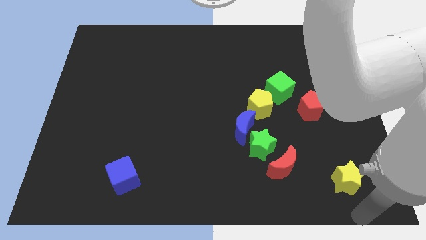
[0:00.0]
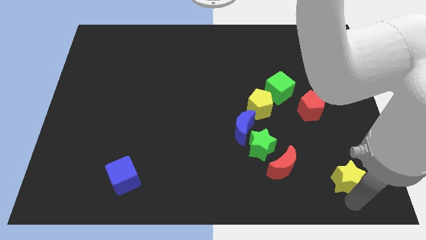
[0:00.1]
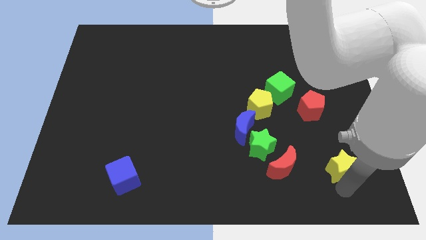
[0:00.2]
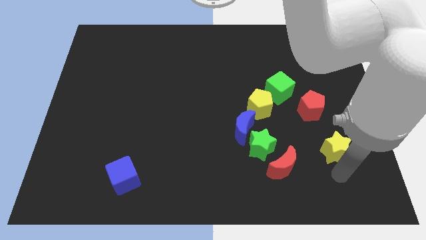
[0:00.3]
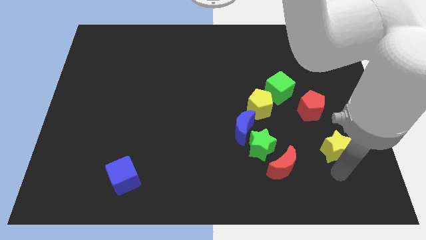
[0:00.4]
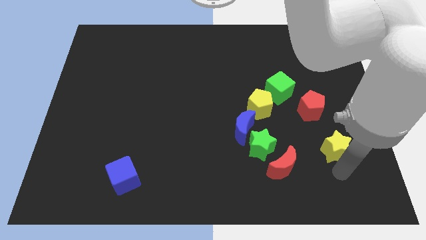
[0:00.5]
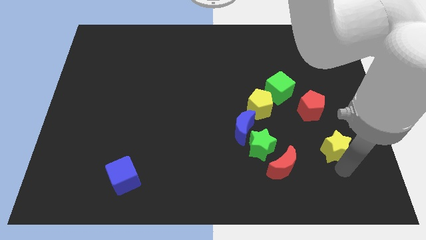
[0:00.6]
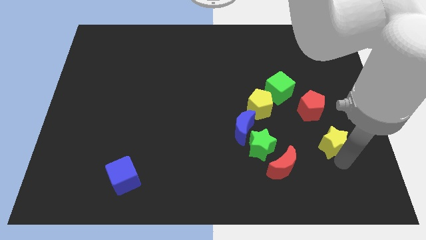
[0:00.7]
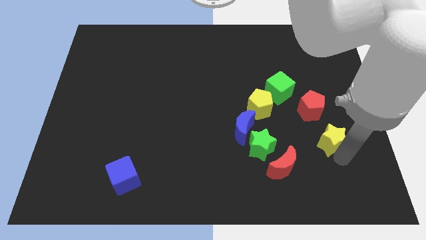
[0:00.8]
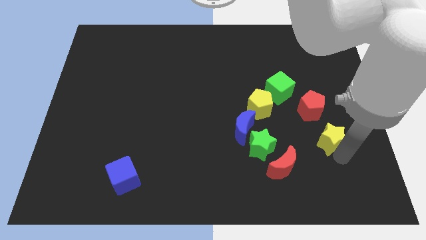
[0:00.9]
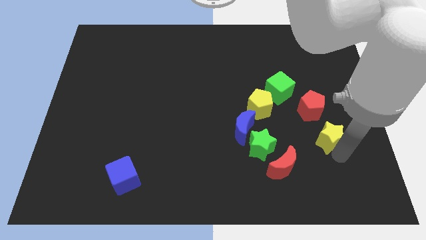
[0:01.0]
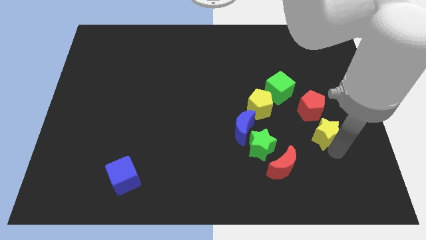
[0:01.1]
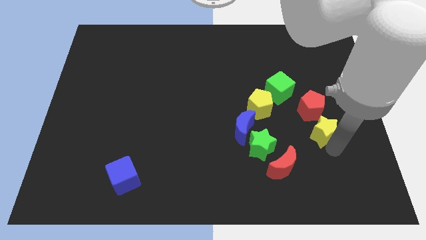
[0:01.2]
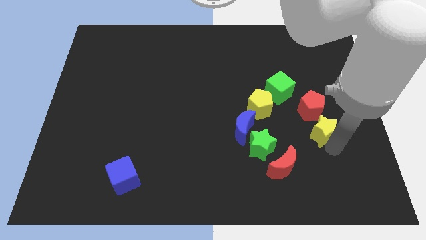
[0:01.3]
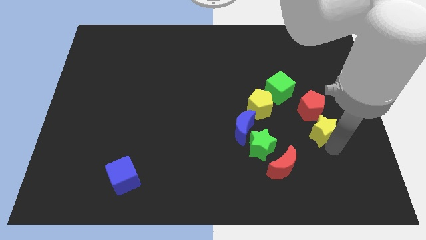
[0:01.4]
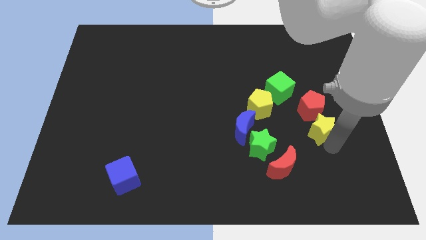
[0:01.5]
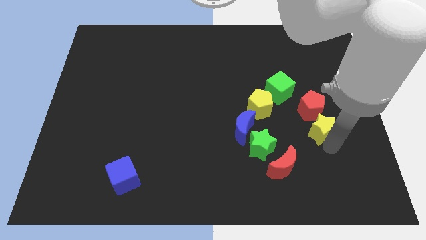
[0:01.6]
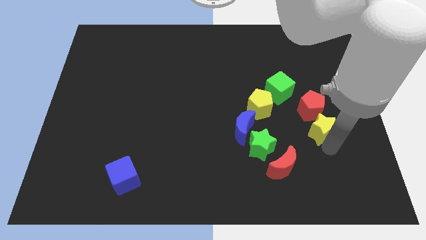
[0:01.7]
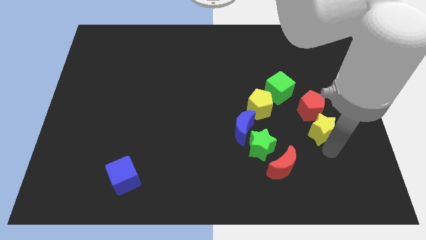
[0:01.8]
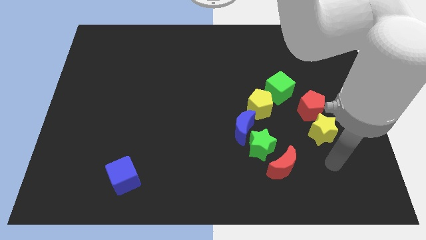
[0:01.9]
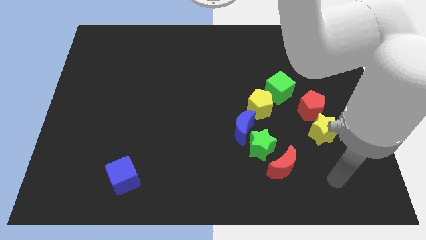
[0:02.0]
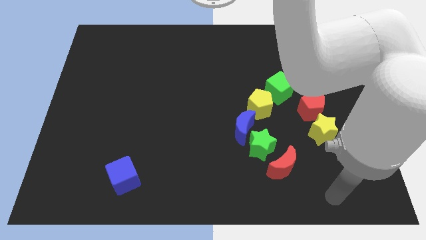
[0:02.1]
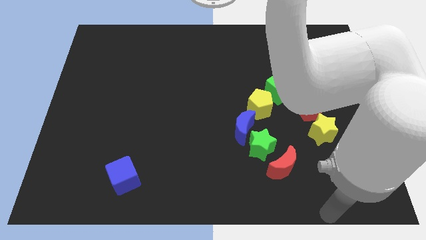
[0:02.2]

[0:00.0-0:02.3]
push the yellow star at the bottom into red pentagon

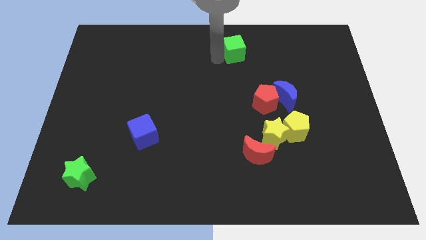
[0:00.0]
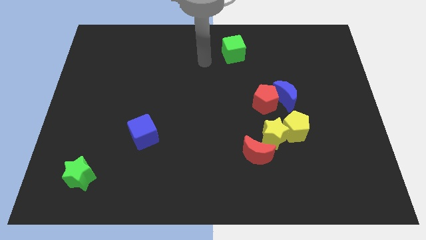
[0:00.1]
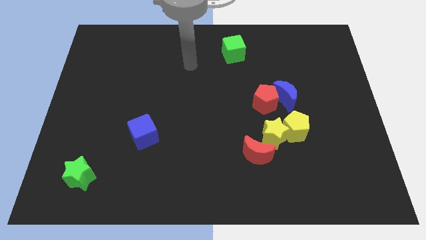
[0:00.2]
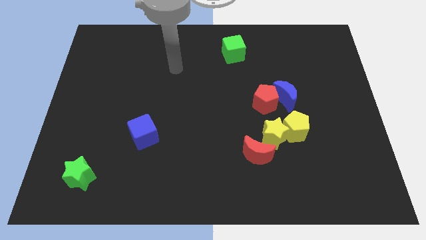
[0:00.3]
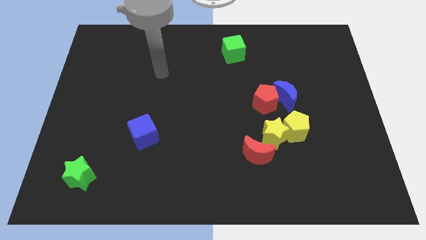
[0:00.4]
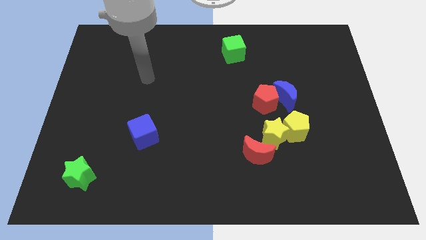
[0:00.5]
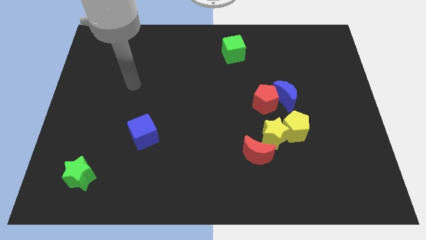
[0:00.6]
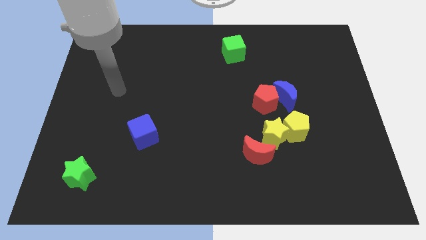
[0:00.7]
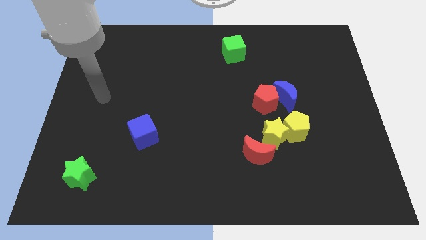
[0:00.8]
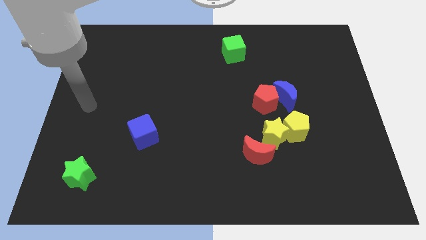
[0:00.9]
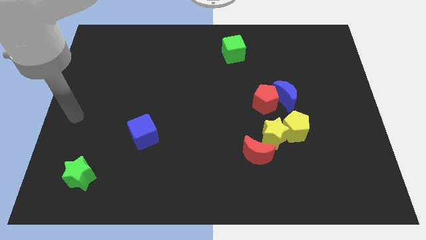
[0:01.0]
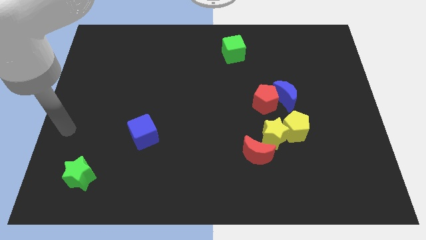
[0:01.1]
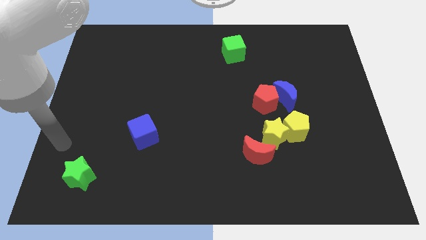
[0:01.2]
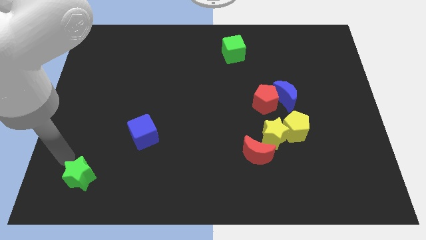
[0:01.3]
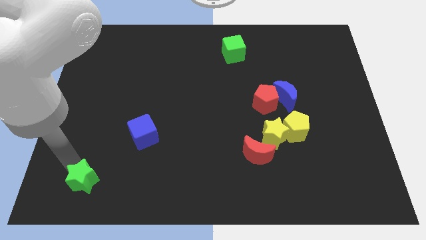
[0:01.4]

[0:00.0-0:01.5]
point your arm at the top left of the green star

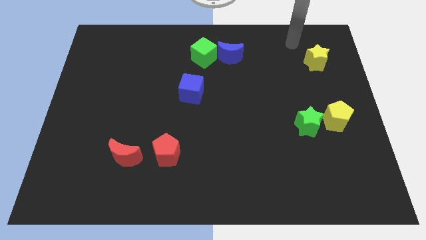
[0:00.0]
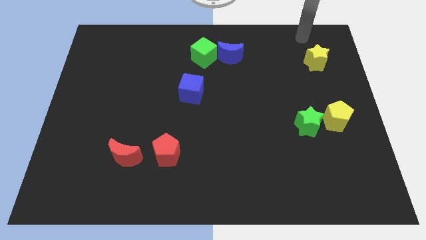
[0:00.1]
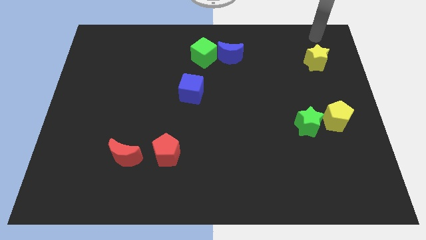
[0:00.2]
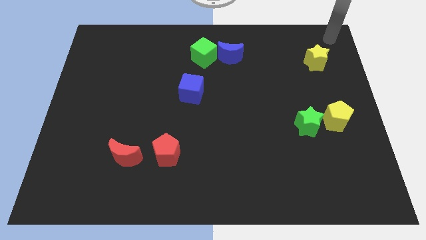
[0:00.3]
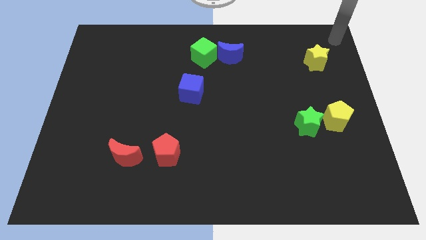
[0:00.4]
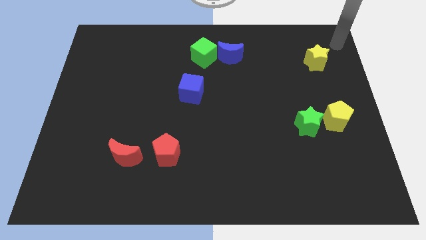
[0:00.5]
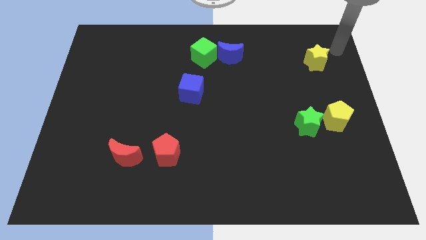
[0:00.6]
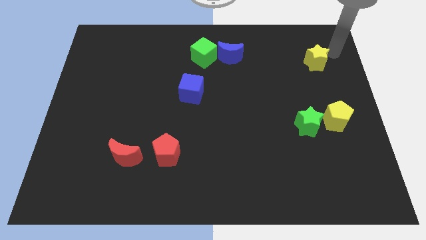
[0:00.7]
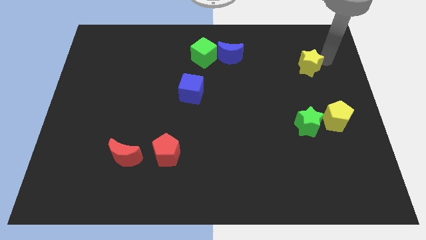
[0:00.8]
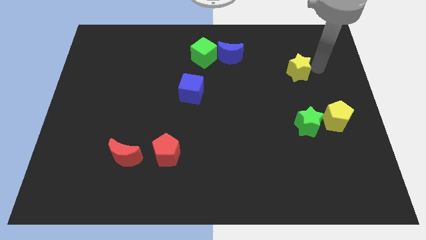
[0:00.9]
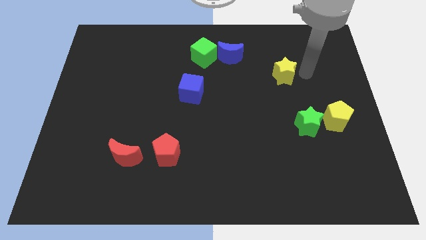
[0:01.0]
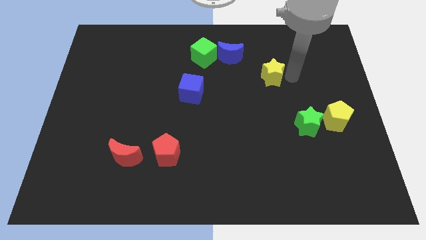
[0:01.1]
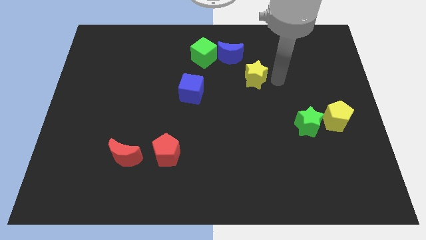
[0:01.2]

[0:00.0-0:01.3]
move the yellow star diagonally to the green star

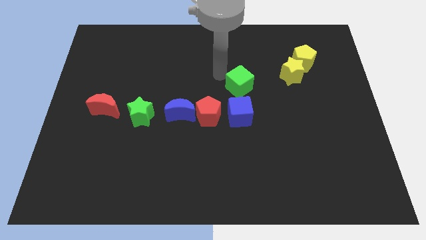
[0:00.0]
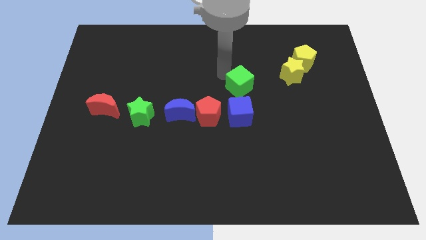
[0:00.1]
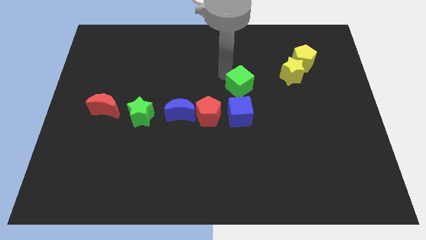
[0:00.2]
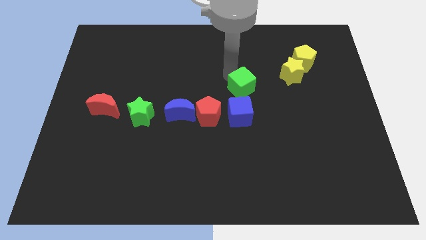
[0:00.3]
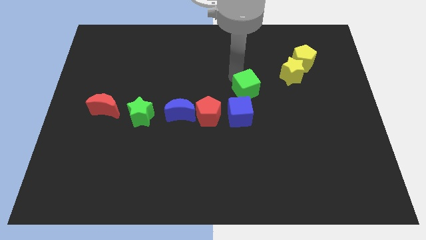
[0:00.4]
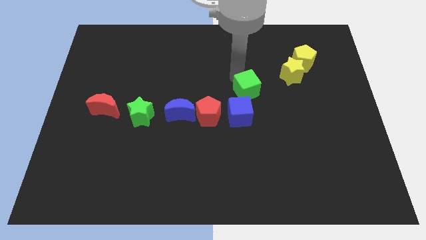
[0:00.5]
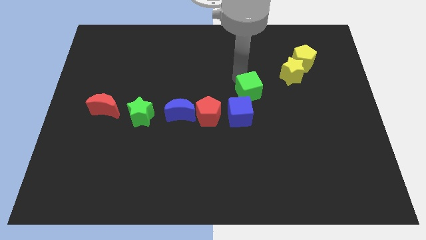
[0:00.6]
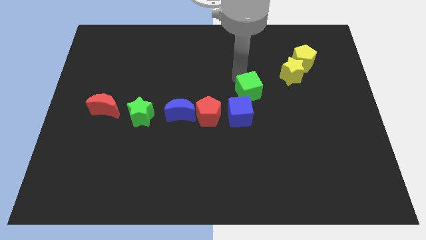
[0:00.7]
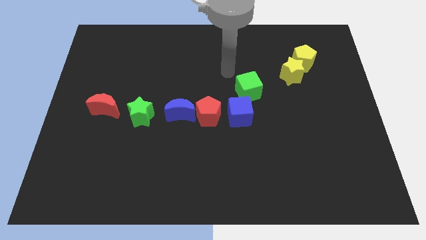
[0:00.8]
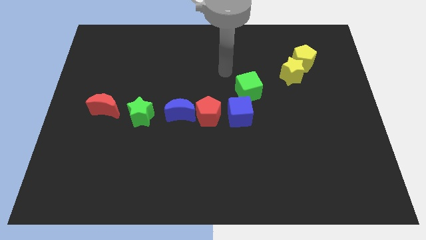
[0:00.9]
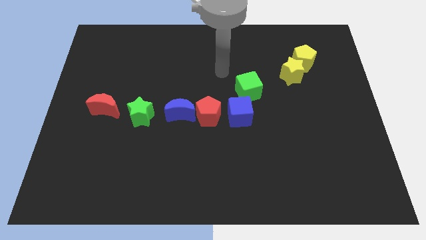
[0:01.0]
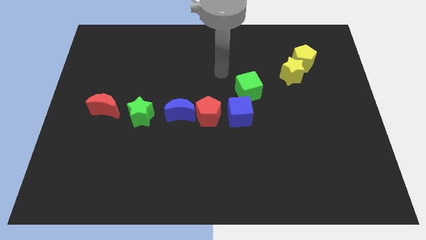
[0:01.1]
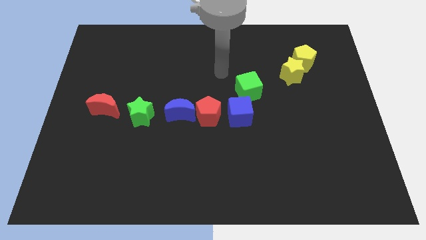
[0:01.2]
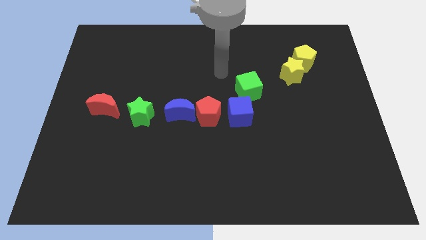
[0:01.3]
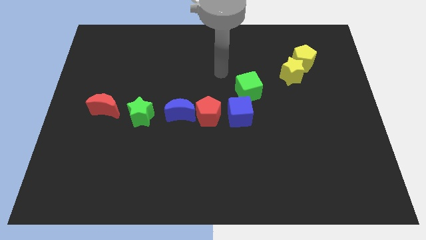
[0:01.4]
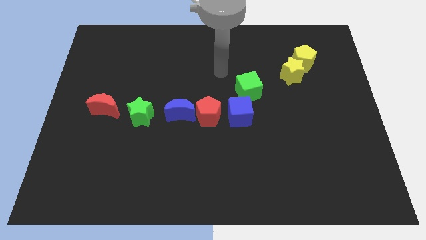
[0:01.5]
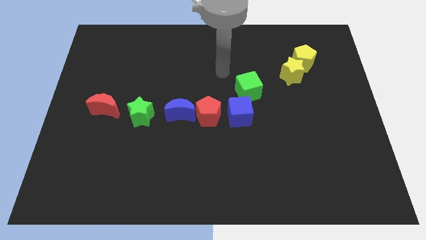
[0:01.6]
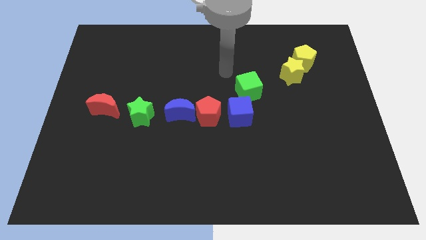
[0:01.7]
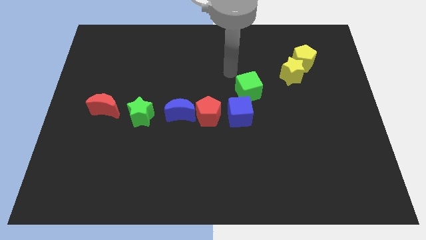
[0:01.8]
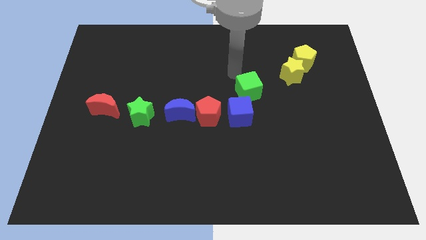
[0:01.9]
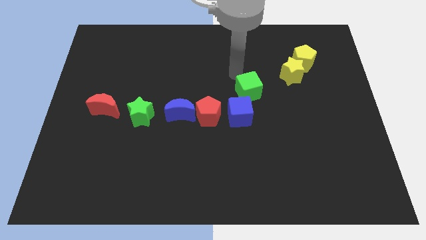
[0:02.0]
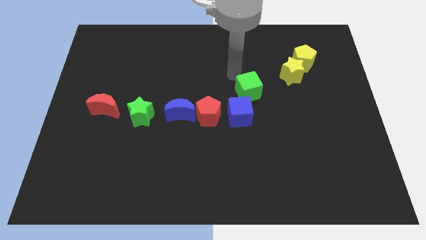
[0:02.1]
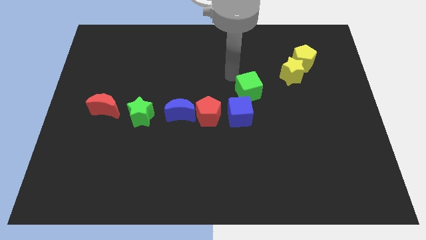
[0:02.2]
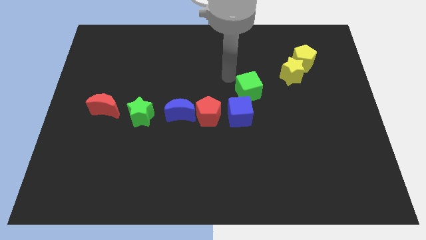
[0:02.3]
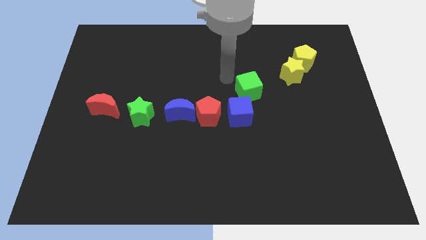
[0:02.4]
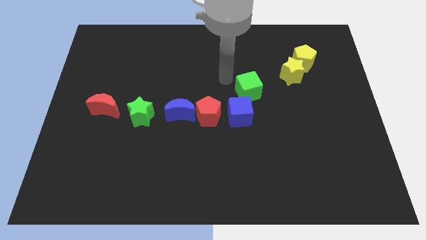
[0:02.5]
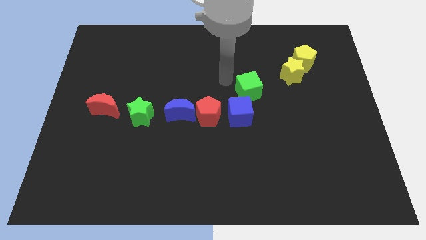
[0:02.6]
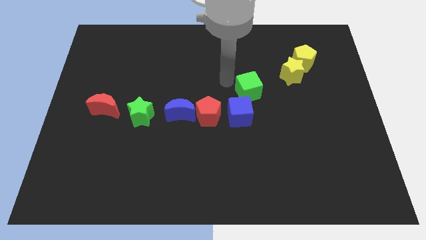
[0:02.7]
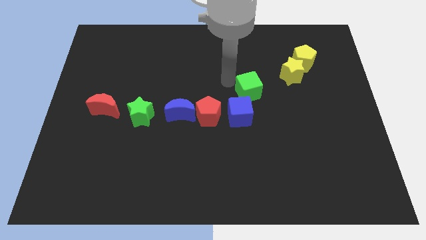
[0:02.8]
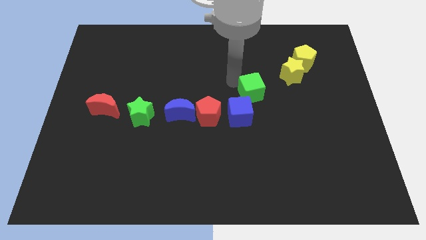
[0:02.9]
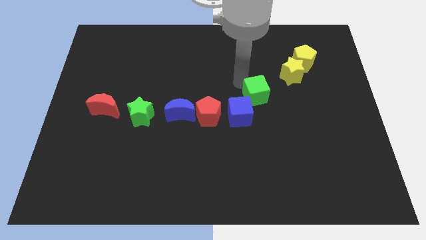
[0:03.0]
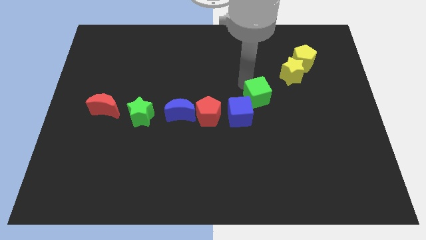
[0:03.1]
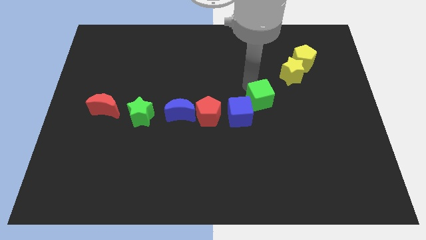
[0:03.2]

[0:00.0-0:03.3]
place the green cube diagonally in between the yellow star and blue cube

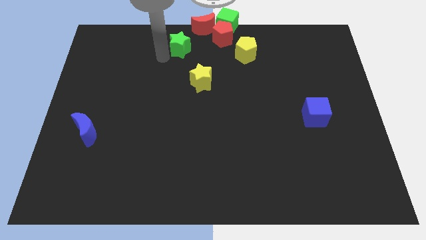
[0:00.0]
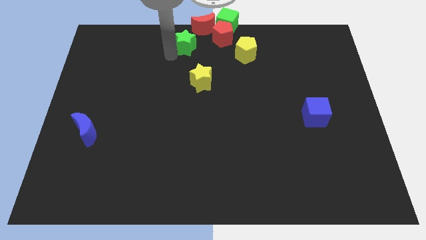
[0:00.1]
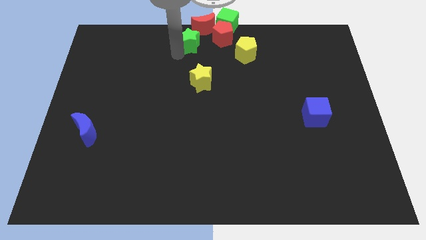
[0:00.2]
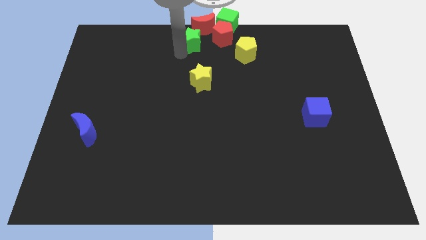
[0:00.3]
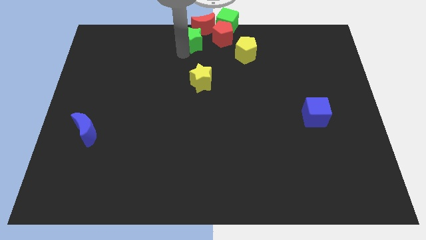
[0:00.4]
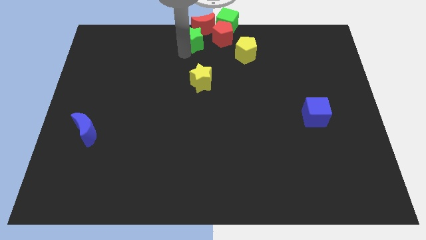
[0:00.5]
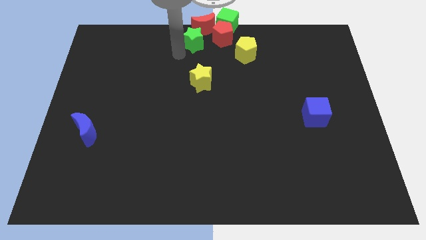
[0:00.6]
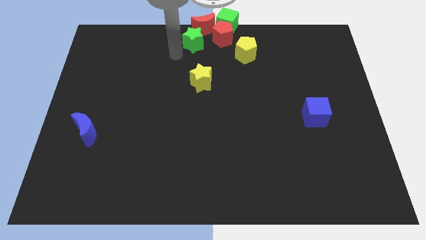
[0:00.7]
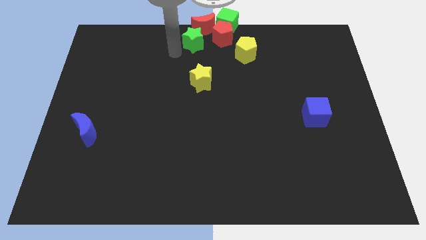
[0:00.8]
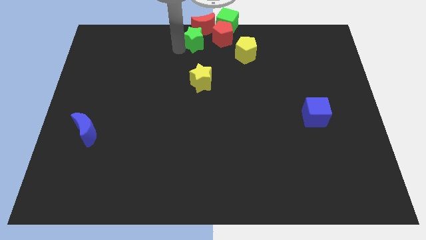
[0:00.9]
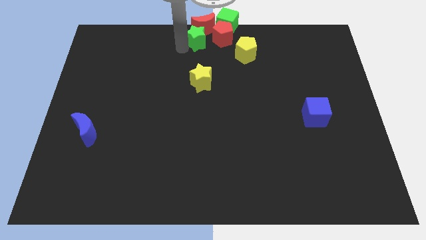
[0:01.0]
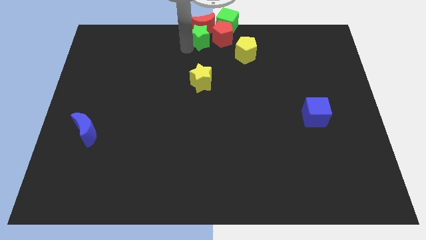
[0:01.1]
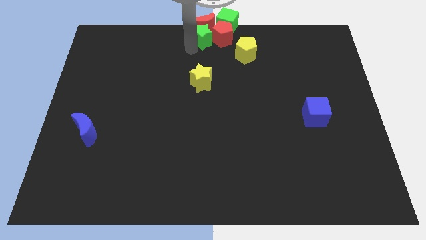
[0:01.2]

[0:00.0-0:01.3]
push the green star towards the left side of the red pentagon
